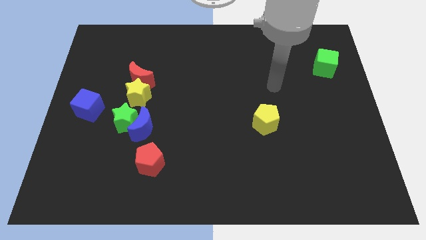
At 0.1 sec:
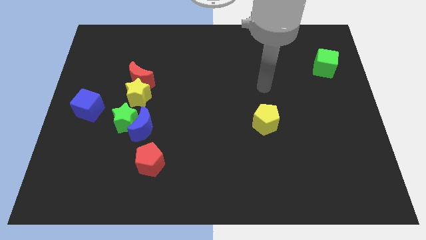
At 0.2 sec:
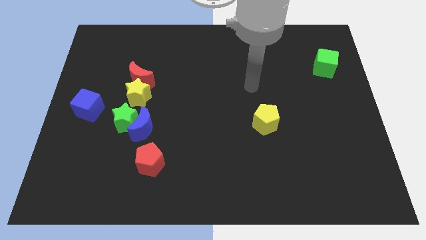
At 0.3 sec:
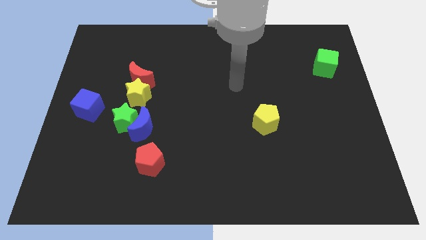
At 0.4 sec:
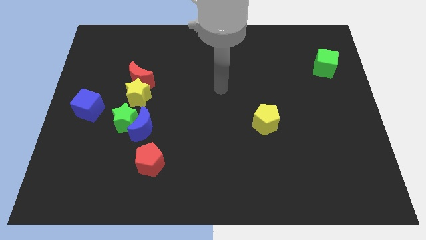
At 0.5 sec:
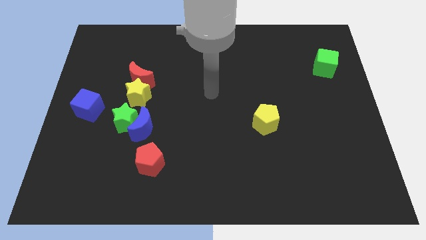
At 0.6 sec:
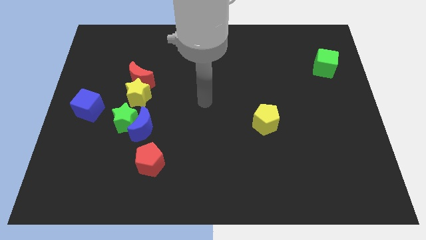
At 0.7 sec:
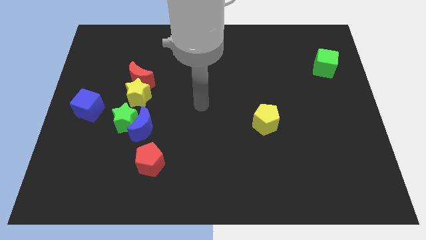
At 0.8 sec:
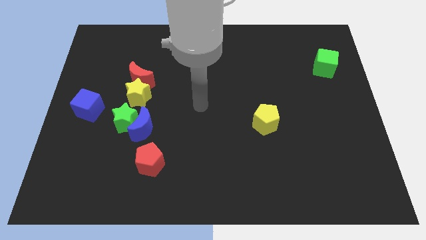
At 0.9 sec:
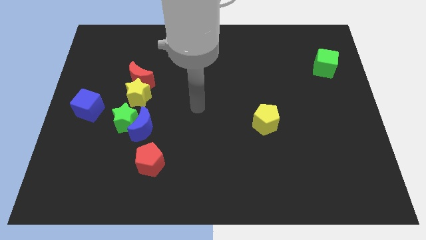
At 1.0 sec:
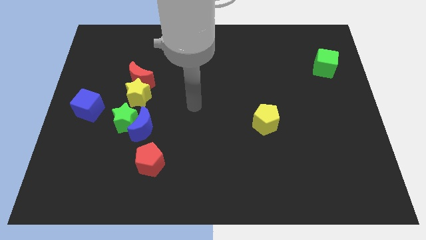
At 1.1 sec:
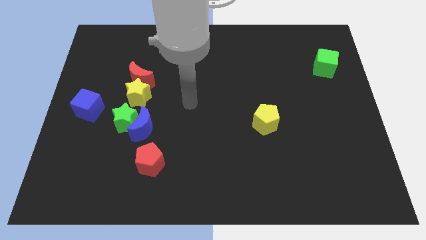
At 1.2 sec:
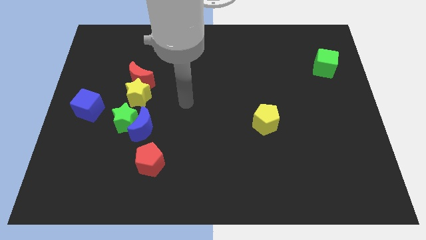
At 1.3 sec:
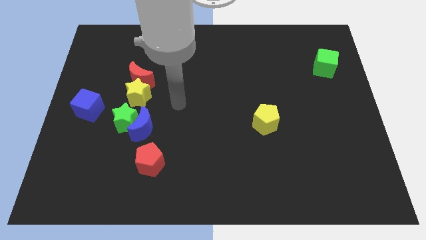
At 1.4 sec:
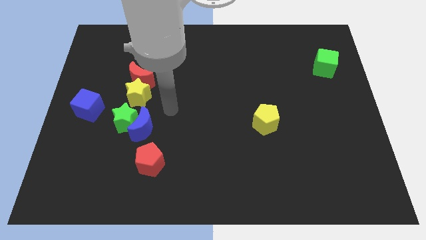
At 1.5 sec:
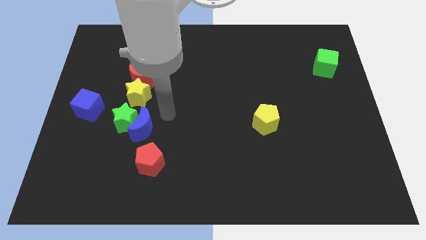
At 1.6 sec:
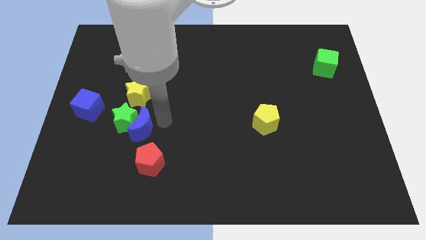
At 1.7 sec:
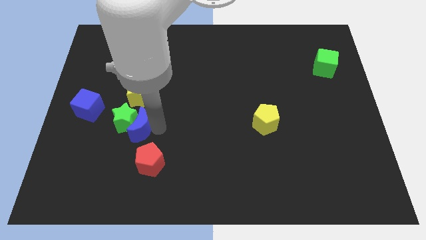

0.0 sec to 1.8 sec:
put your hand parallel right to the blue moon

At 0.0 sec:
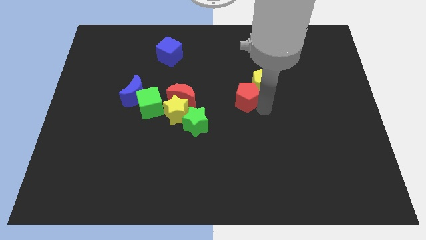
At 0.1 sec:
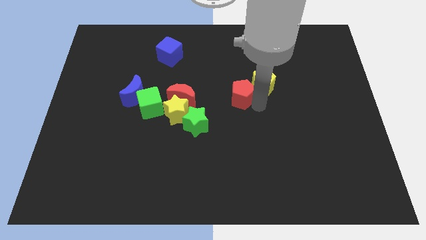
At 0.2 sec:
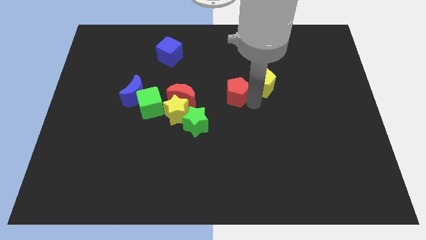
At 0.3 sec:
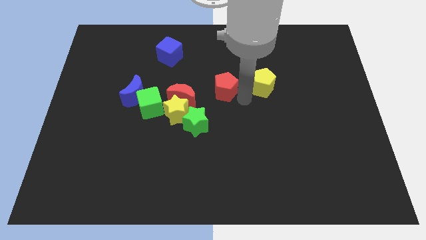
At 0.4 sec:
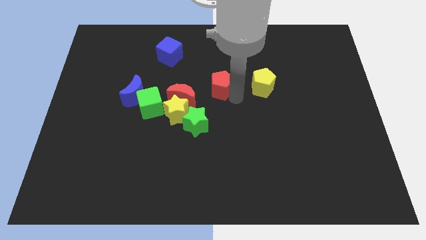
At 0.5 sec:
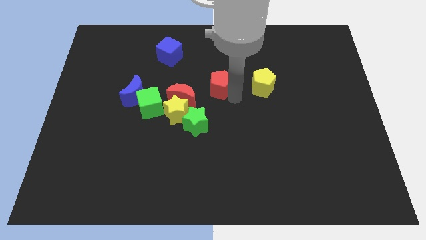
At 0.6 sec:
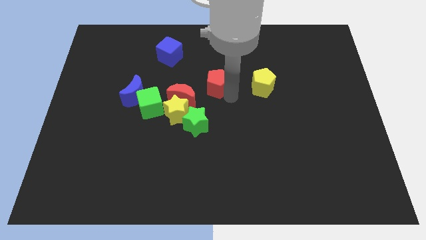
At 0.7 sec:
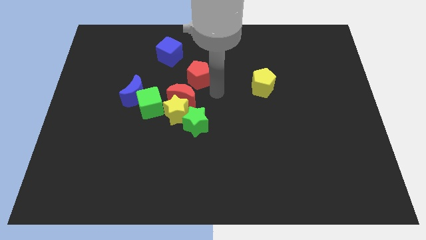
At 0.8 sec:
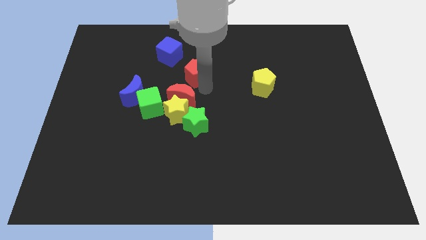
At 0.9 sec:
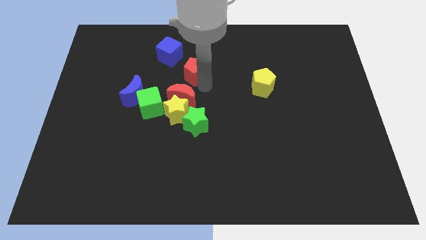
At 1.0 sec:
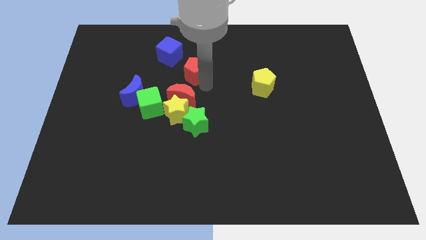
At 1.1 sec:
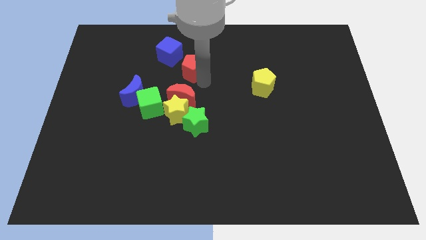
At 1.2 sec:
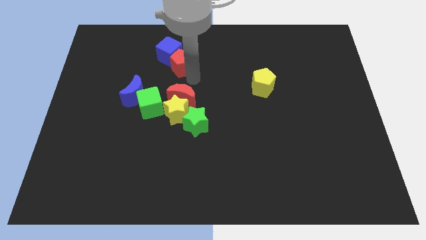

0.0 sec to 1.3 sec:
move the red pentagon to the top of the red crescent

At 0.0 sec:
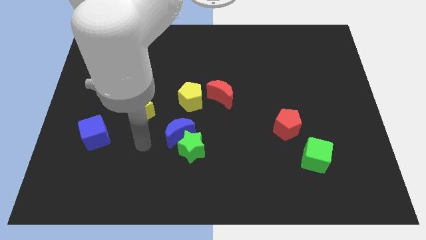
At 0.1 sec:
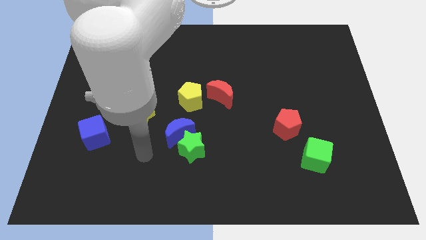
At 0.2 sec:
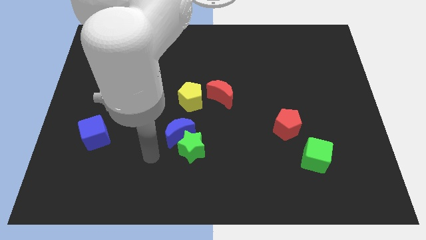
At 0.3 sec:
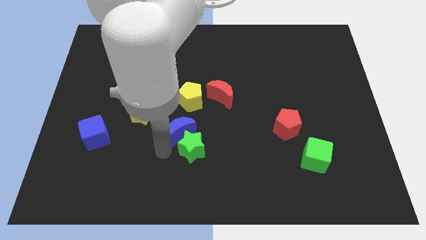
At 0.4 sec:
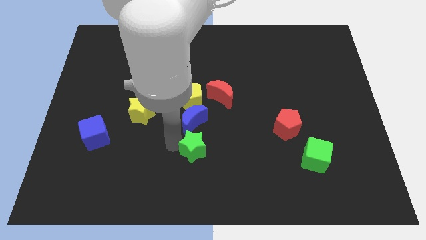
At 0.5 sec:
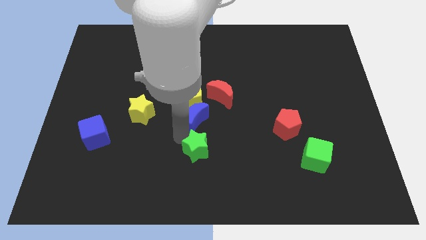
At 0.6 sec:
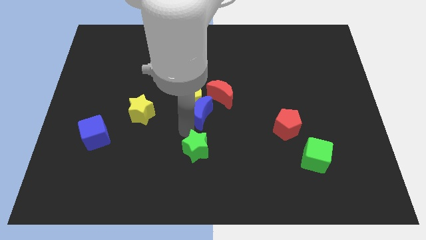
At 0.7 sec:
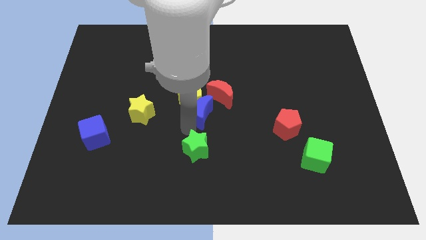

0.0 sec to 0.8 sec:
push the blue crescent below the yellow pentagon

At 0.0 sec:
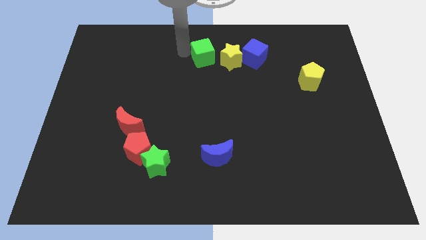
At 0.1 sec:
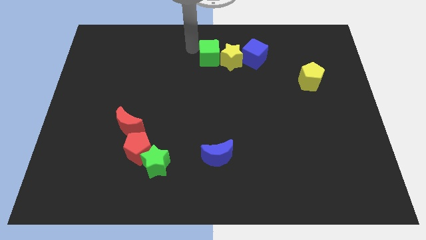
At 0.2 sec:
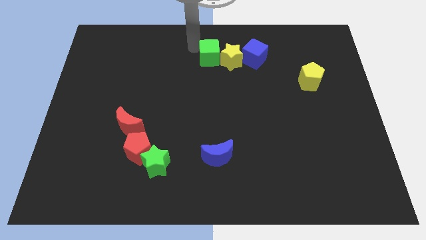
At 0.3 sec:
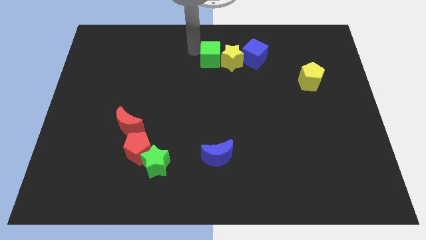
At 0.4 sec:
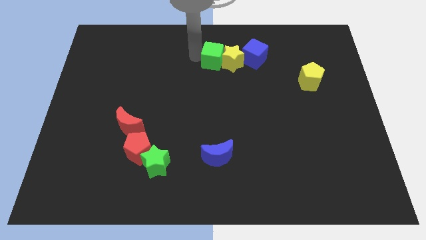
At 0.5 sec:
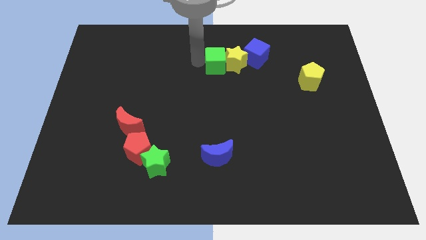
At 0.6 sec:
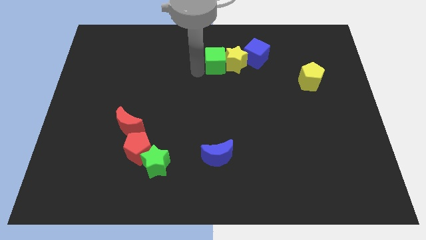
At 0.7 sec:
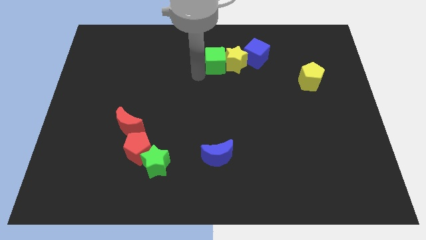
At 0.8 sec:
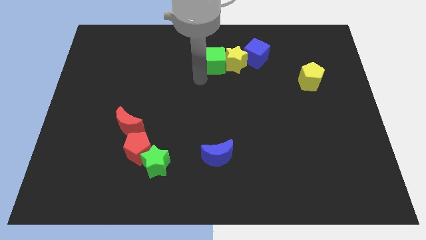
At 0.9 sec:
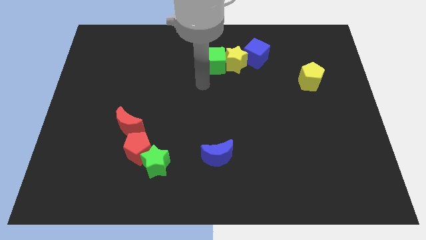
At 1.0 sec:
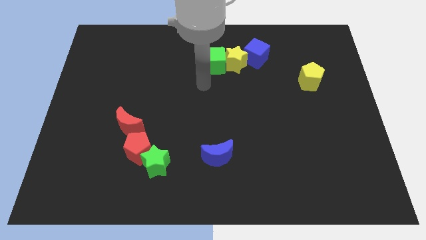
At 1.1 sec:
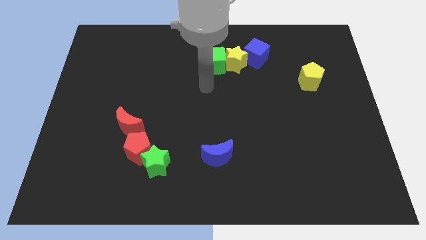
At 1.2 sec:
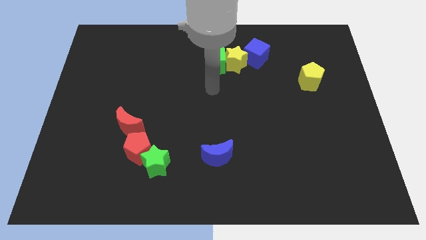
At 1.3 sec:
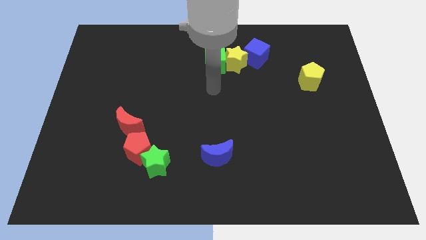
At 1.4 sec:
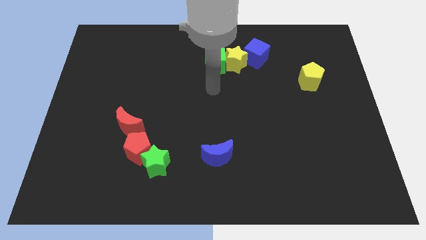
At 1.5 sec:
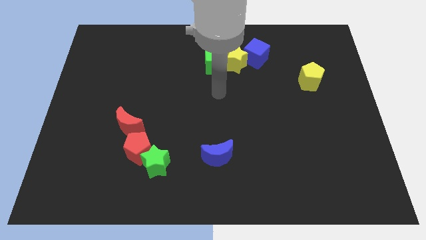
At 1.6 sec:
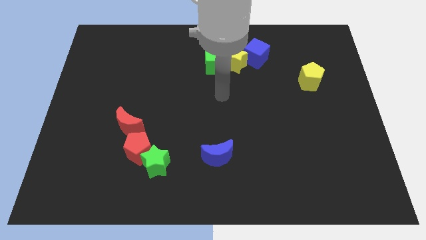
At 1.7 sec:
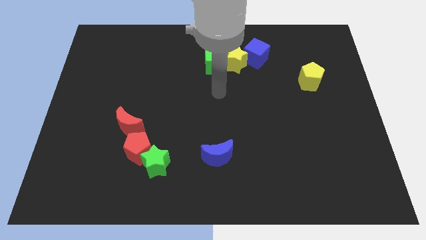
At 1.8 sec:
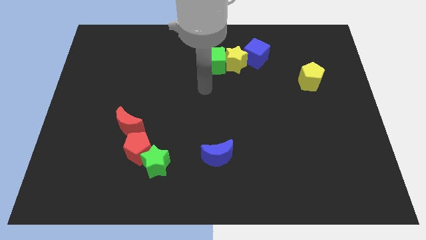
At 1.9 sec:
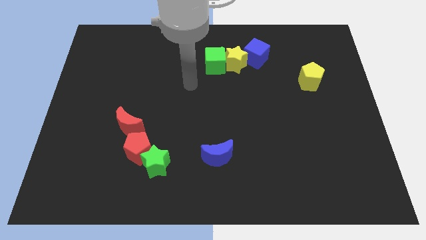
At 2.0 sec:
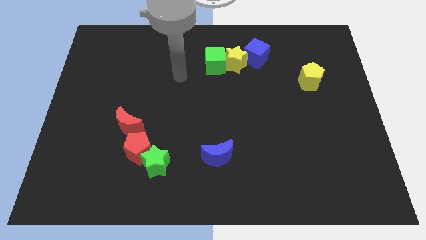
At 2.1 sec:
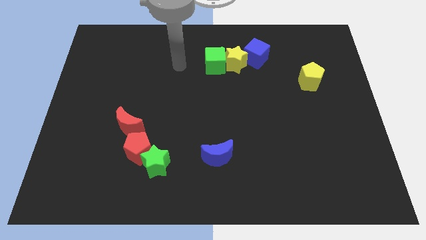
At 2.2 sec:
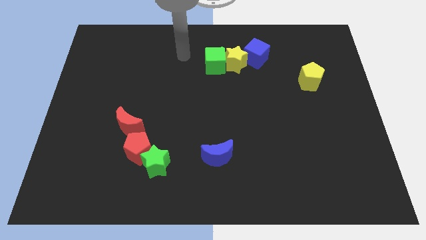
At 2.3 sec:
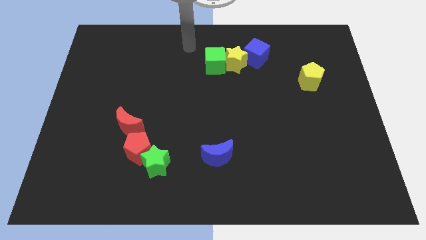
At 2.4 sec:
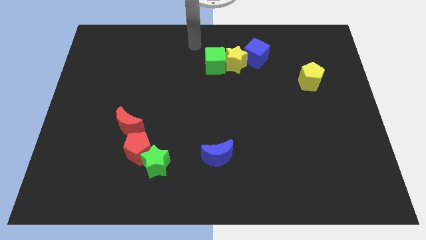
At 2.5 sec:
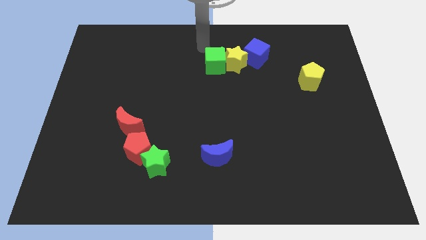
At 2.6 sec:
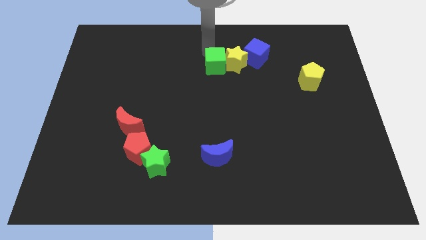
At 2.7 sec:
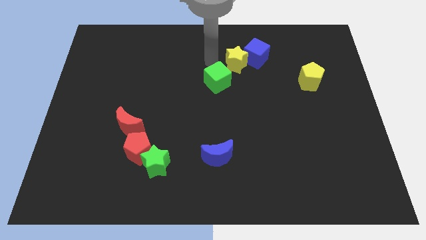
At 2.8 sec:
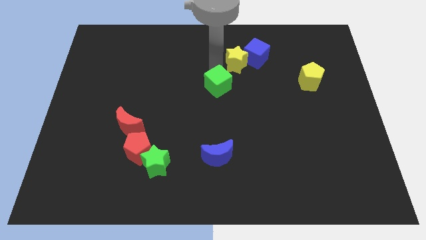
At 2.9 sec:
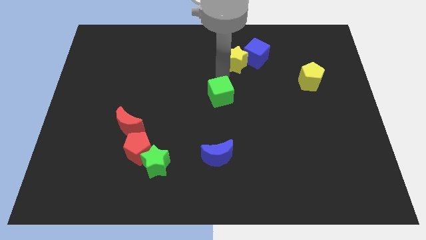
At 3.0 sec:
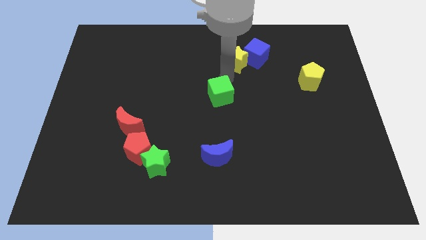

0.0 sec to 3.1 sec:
push the green cube towards the center above the blue moon

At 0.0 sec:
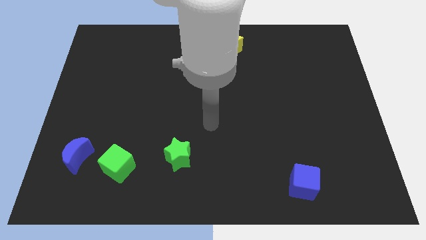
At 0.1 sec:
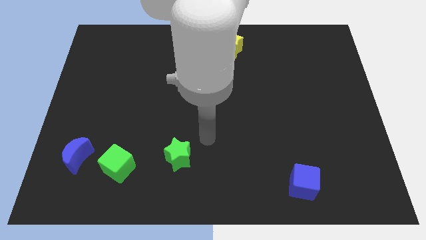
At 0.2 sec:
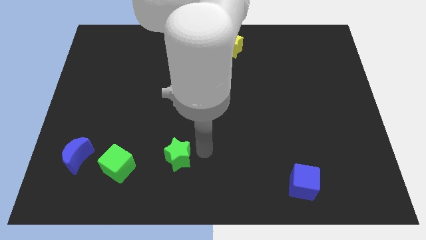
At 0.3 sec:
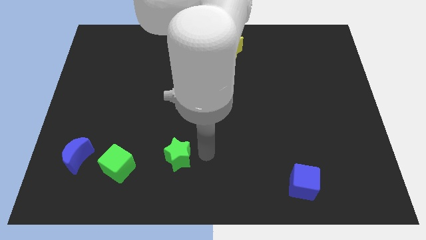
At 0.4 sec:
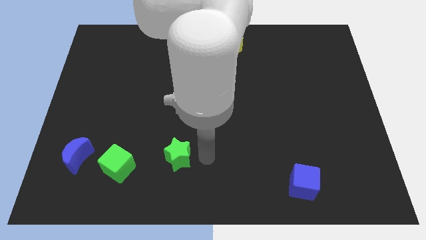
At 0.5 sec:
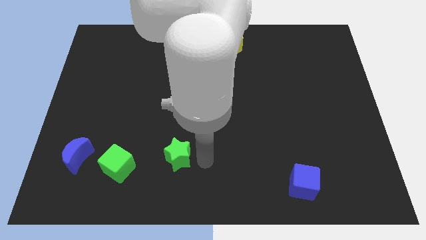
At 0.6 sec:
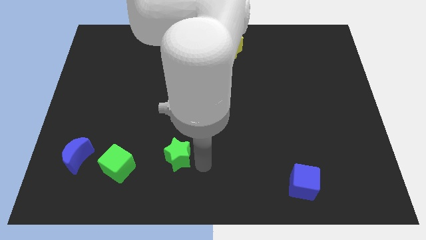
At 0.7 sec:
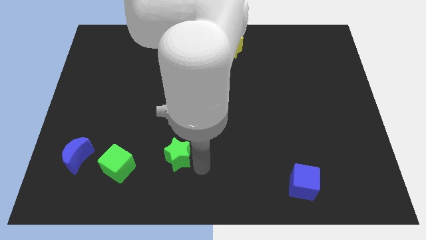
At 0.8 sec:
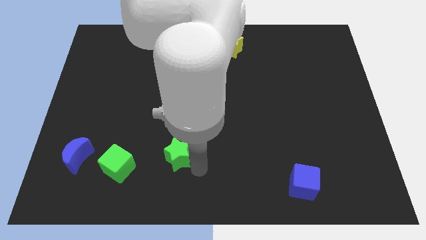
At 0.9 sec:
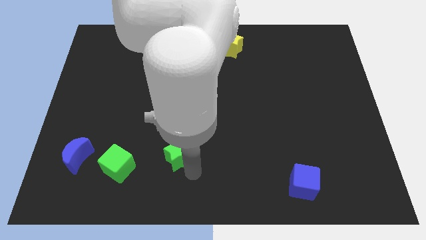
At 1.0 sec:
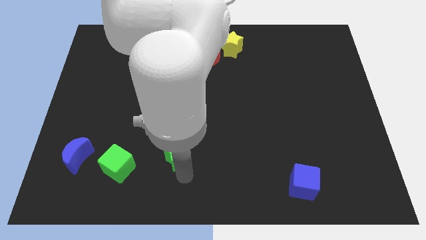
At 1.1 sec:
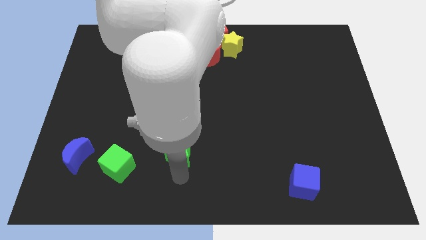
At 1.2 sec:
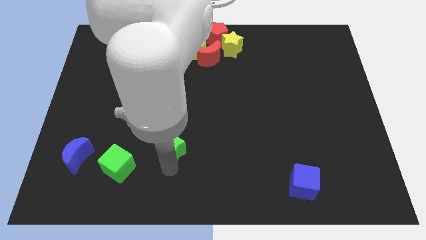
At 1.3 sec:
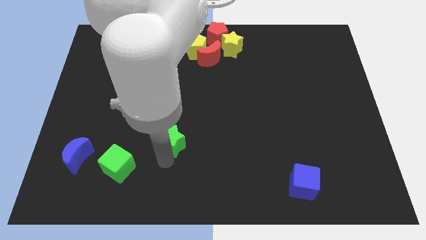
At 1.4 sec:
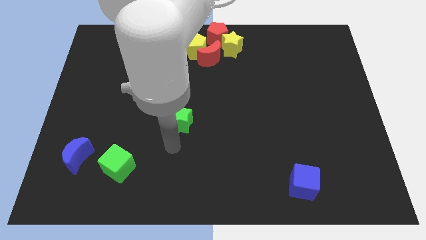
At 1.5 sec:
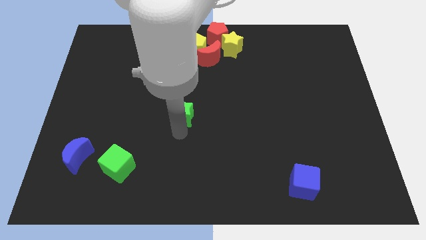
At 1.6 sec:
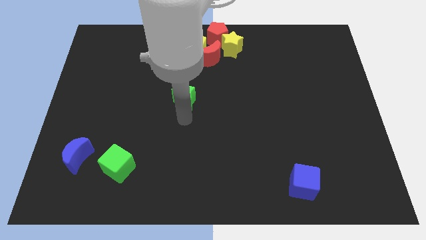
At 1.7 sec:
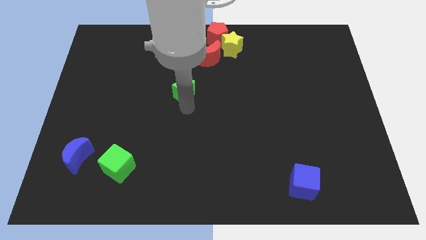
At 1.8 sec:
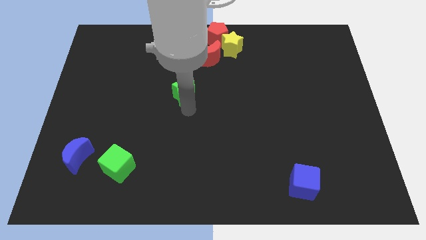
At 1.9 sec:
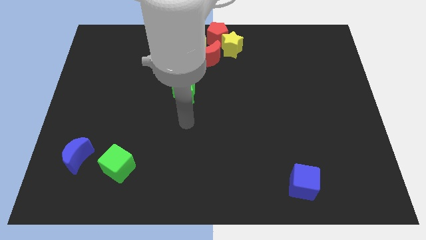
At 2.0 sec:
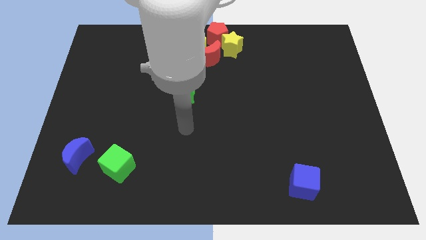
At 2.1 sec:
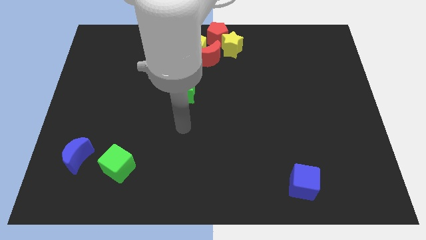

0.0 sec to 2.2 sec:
slide green star to the center
